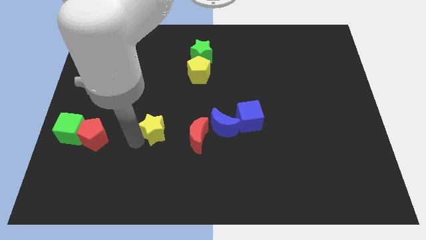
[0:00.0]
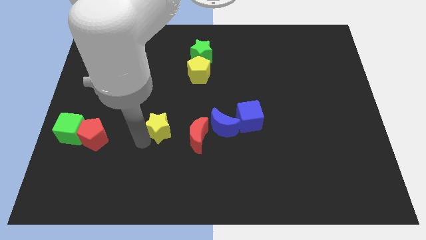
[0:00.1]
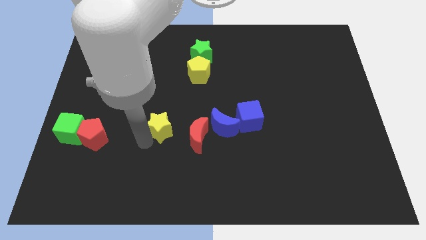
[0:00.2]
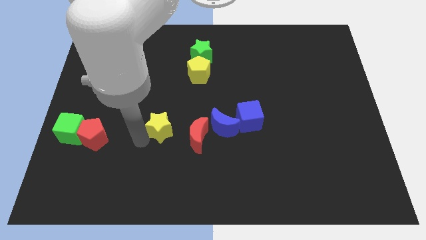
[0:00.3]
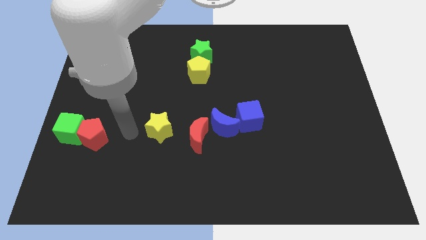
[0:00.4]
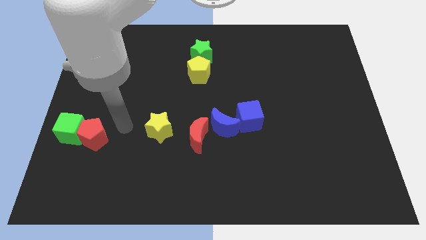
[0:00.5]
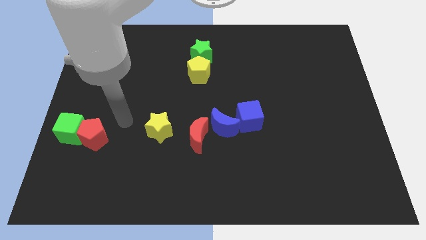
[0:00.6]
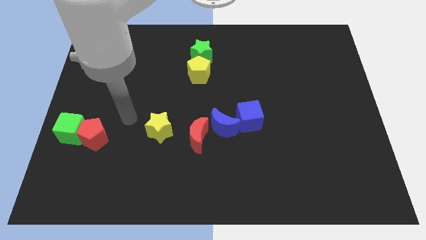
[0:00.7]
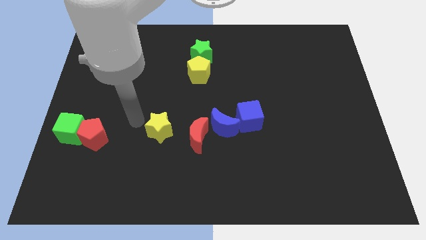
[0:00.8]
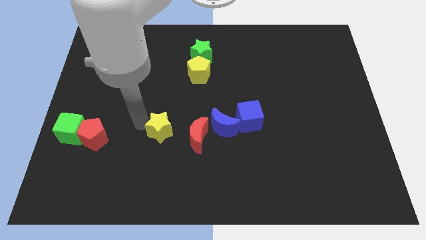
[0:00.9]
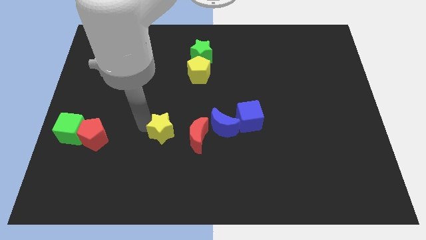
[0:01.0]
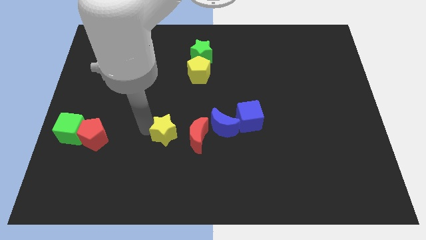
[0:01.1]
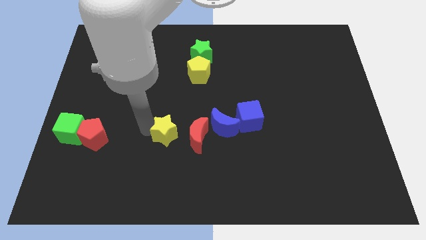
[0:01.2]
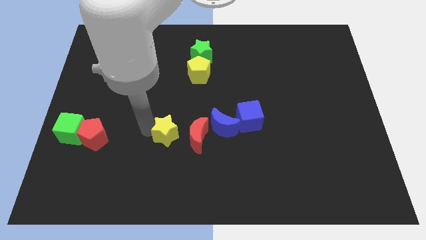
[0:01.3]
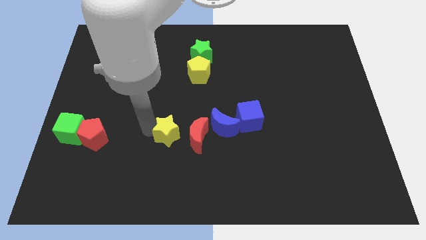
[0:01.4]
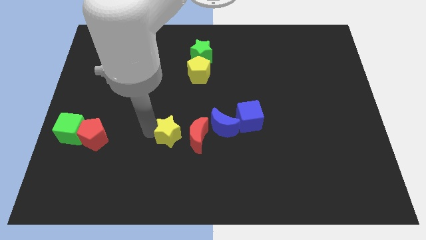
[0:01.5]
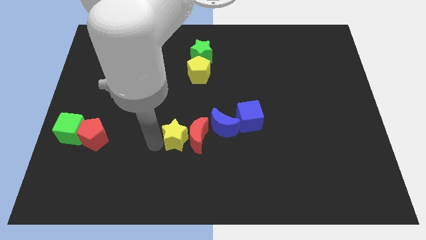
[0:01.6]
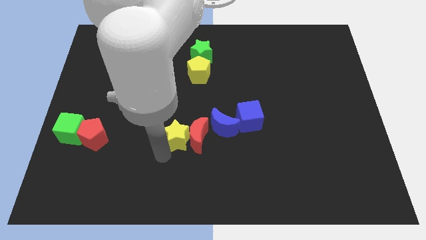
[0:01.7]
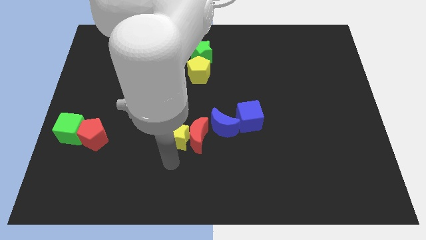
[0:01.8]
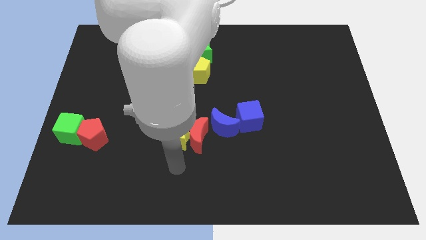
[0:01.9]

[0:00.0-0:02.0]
move the yellow star to the left of the red crescent

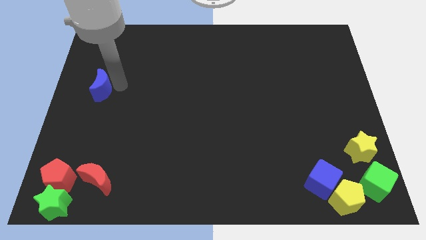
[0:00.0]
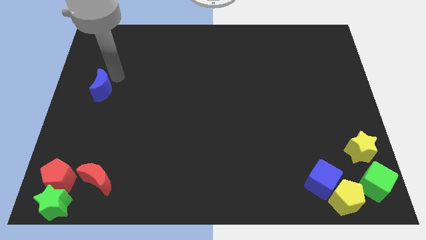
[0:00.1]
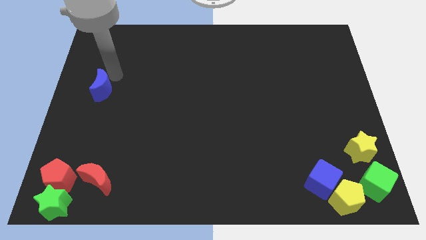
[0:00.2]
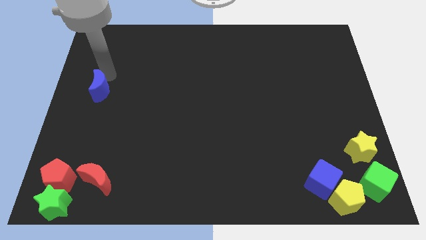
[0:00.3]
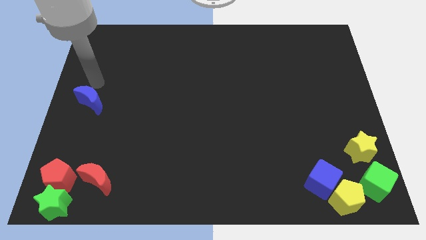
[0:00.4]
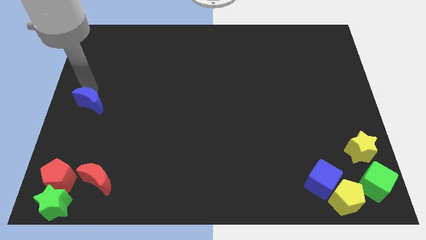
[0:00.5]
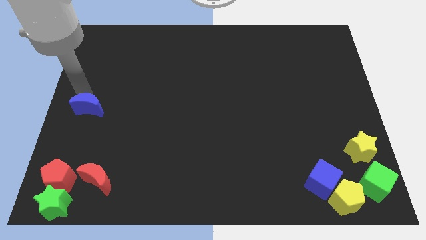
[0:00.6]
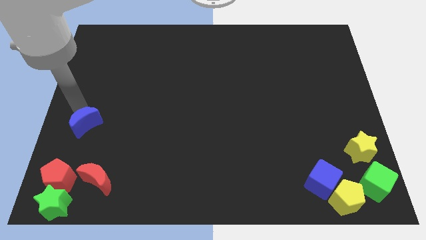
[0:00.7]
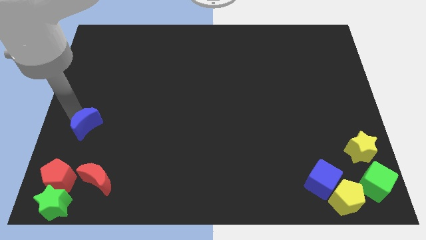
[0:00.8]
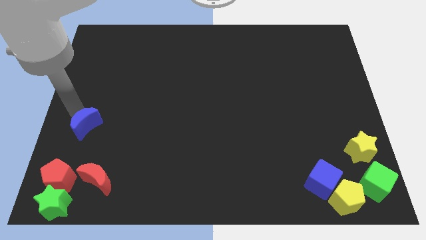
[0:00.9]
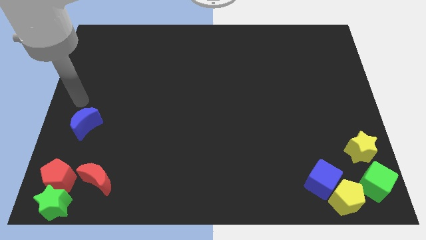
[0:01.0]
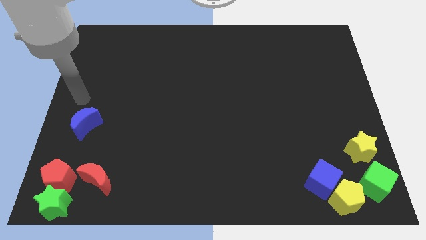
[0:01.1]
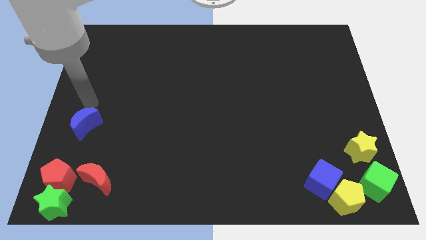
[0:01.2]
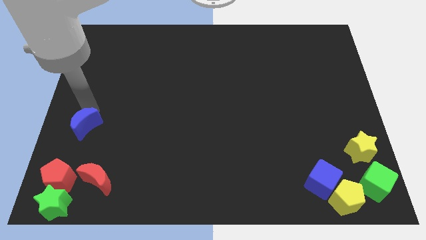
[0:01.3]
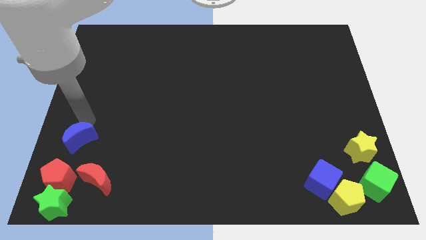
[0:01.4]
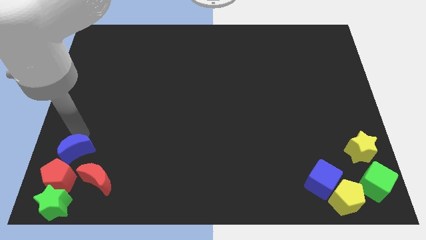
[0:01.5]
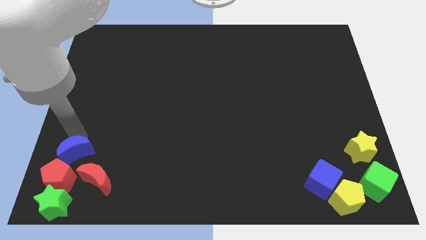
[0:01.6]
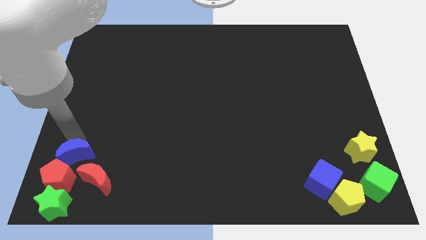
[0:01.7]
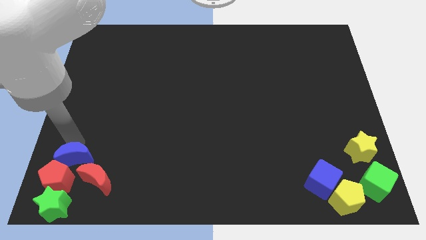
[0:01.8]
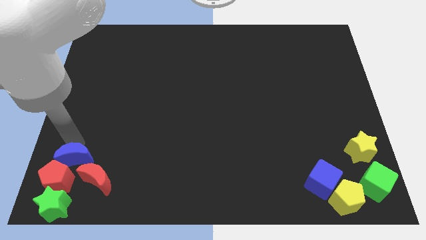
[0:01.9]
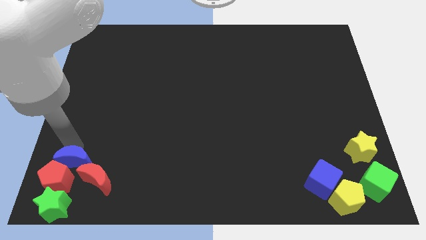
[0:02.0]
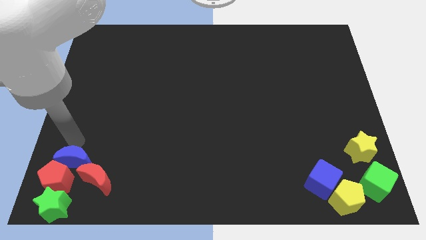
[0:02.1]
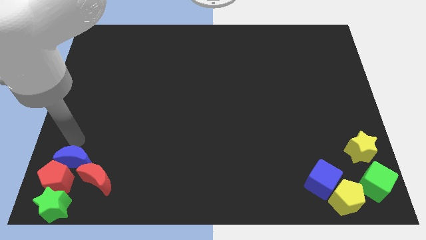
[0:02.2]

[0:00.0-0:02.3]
place blue crescent near to red pentagon

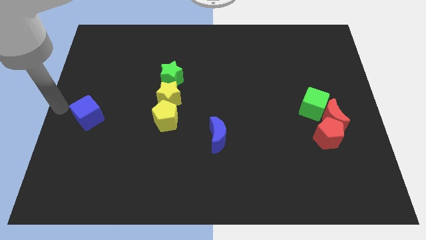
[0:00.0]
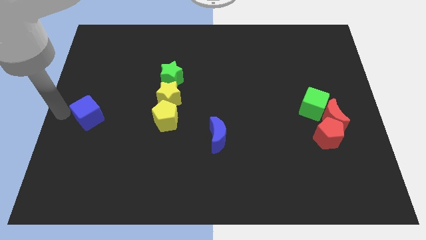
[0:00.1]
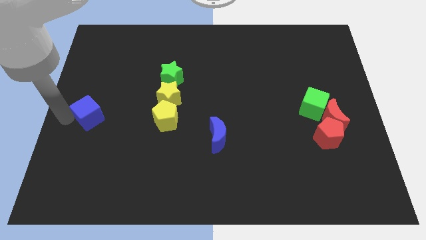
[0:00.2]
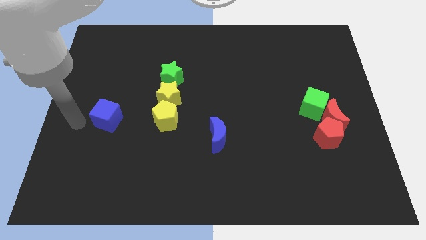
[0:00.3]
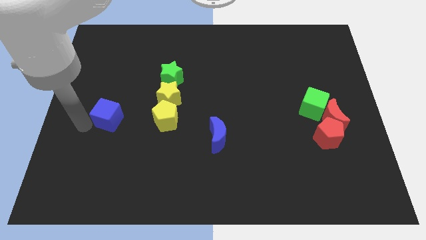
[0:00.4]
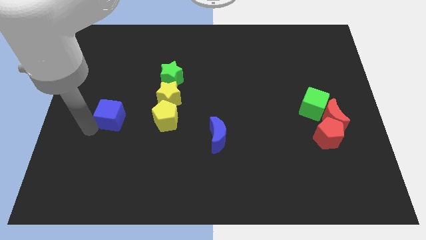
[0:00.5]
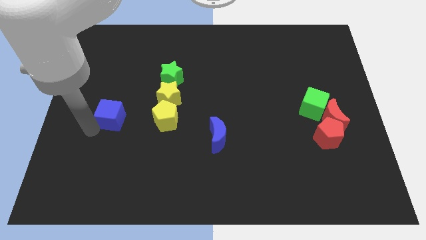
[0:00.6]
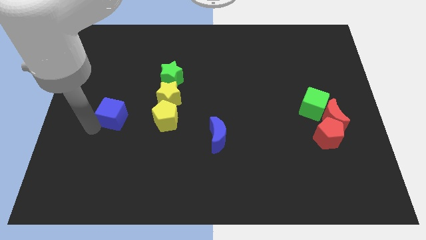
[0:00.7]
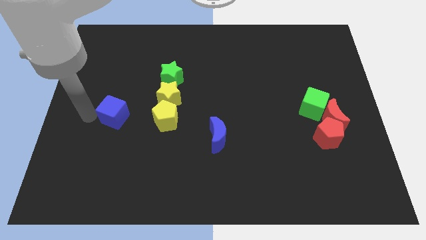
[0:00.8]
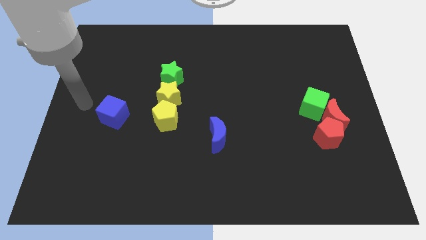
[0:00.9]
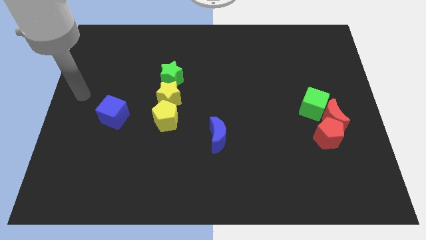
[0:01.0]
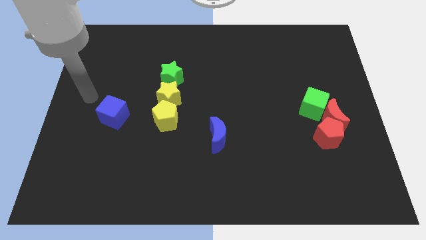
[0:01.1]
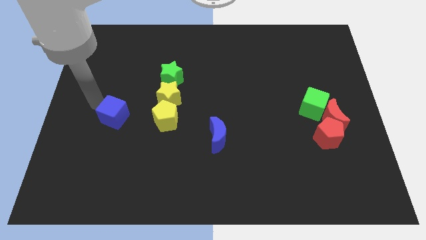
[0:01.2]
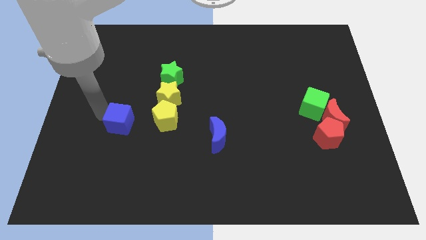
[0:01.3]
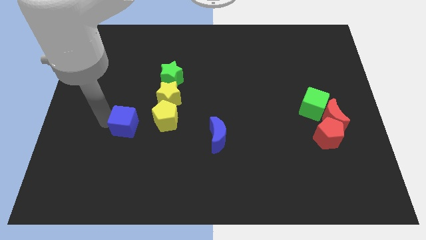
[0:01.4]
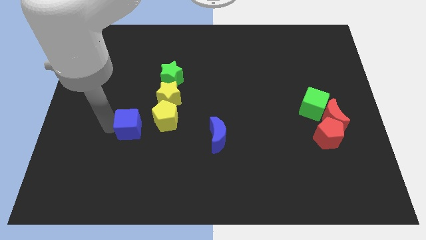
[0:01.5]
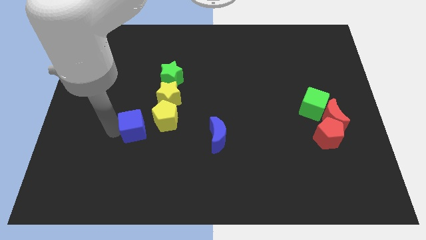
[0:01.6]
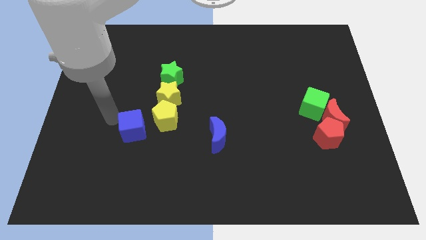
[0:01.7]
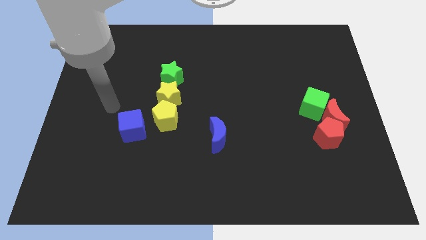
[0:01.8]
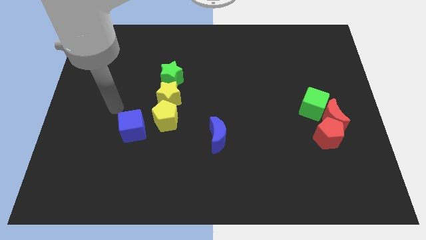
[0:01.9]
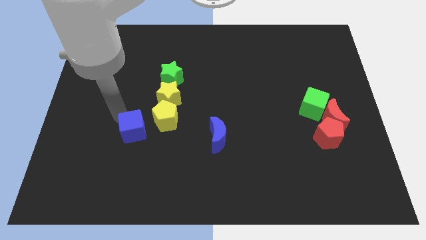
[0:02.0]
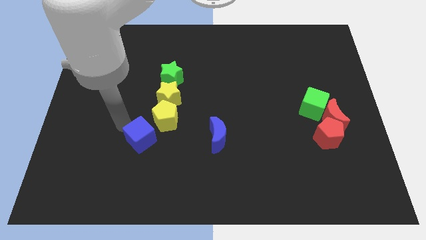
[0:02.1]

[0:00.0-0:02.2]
push the blue cube to the left side of the yellow pentagon

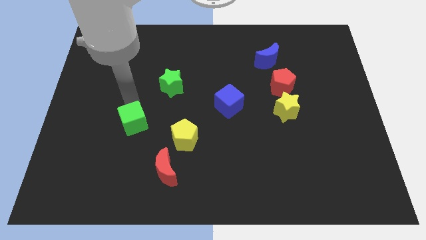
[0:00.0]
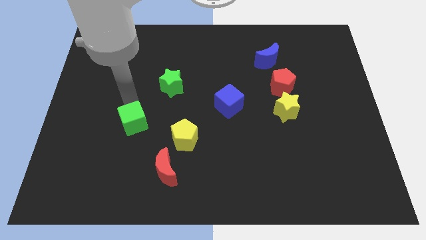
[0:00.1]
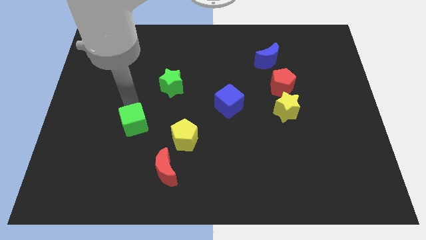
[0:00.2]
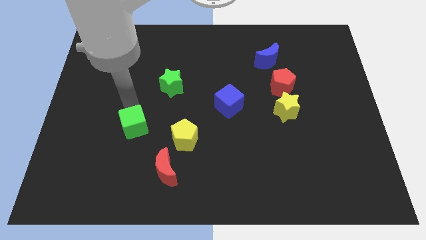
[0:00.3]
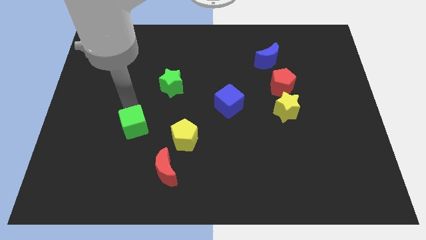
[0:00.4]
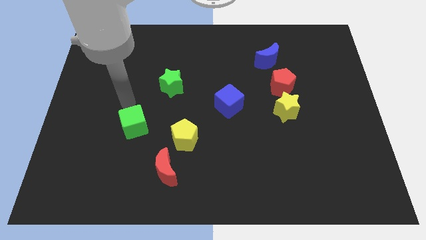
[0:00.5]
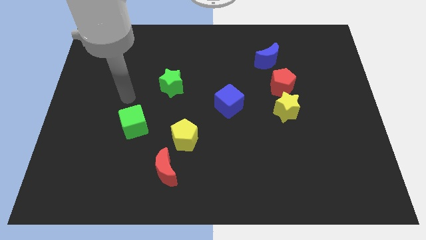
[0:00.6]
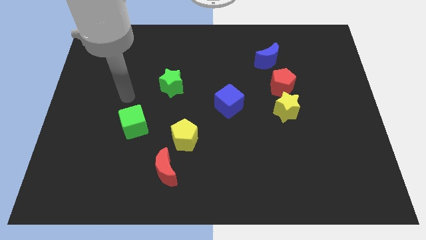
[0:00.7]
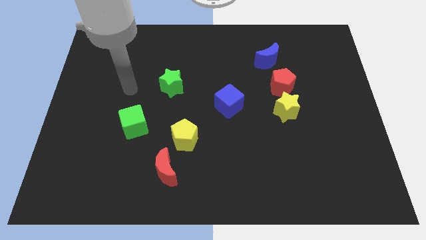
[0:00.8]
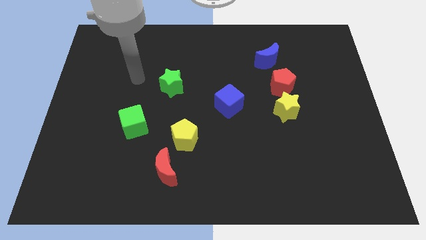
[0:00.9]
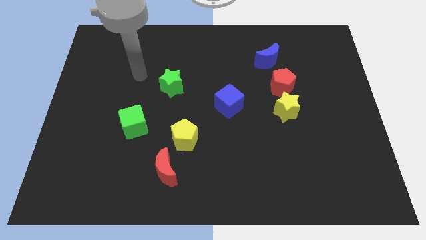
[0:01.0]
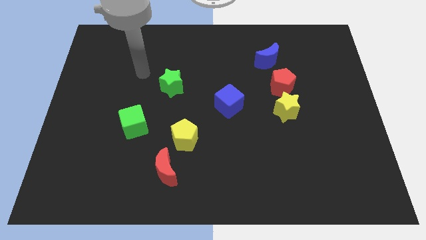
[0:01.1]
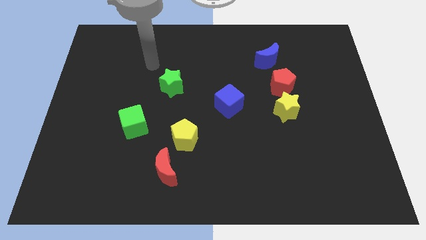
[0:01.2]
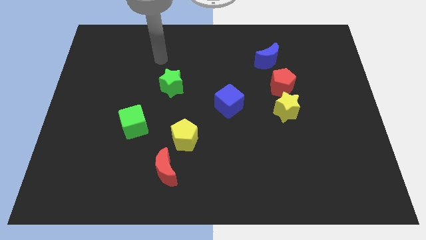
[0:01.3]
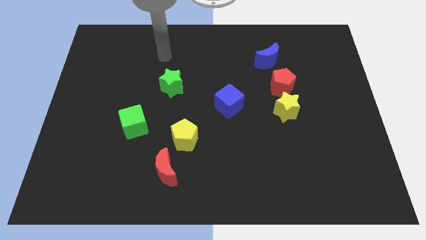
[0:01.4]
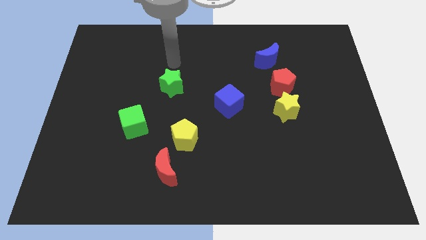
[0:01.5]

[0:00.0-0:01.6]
place the arm at the top of the green star

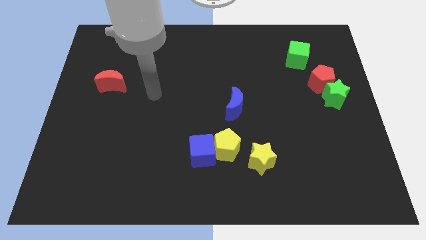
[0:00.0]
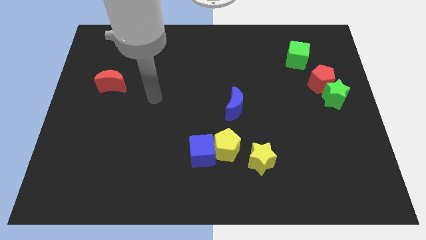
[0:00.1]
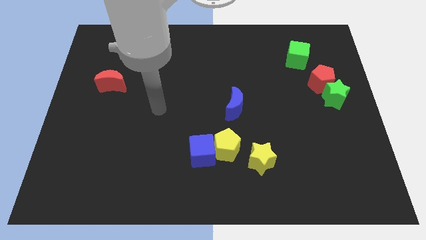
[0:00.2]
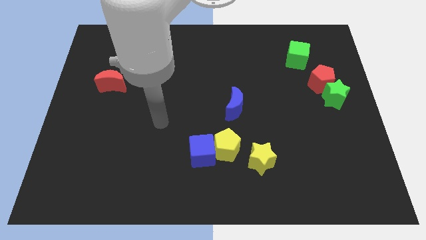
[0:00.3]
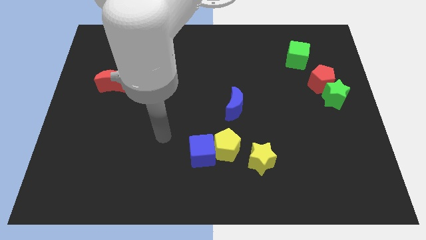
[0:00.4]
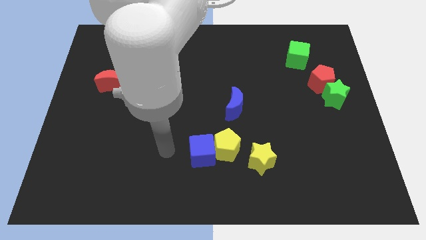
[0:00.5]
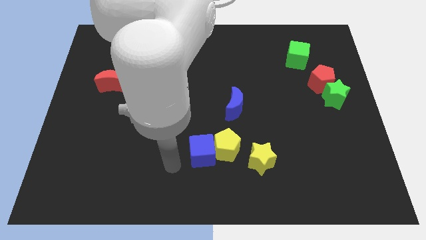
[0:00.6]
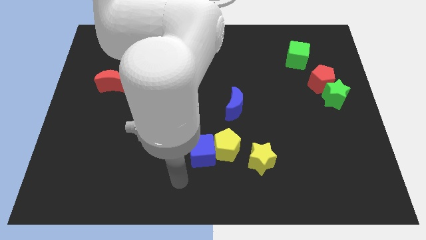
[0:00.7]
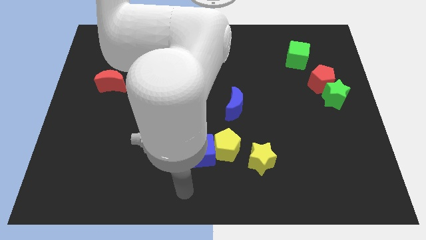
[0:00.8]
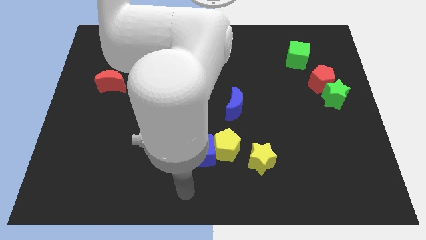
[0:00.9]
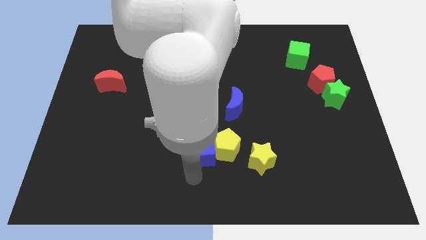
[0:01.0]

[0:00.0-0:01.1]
slide your arm below blue cube
